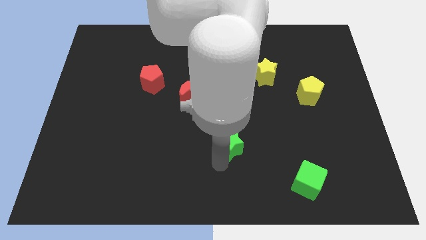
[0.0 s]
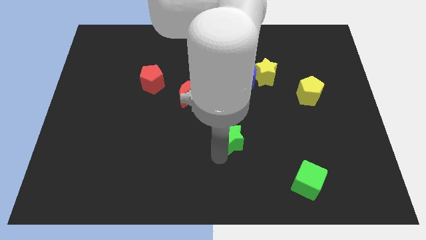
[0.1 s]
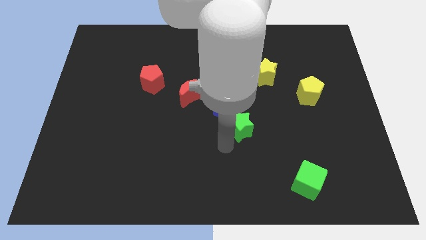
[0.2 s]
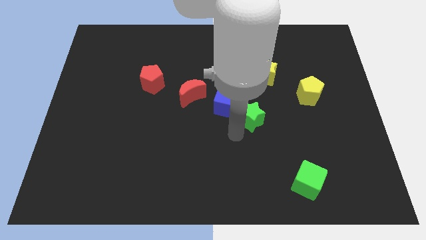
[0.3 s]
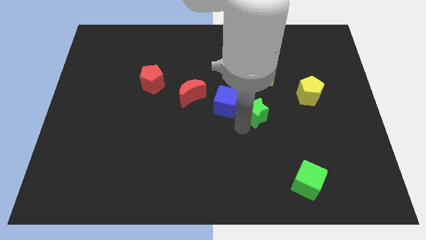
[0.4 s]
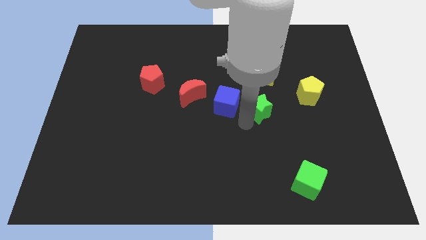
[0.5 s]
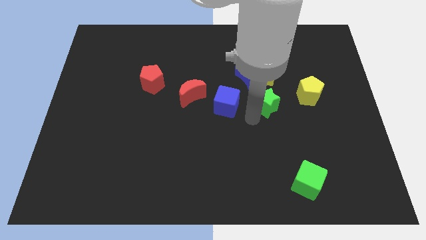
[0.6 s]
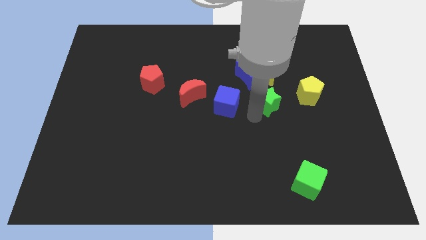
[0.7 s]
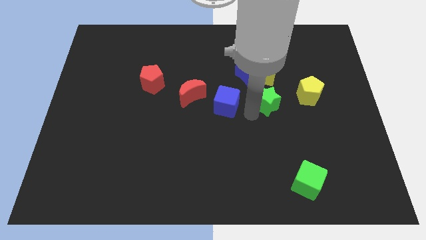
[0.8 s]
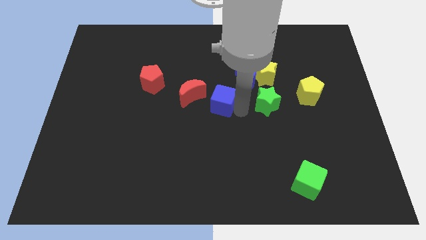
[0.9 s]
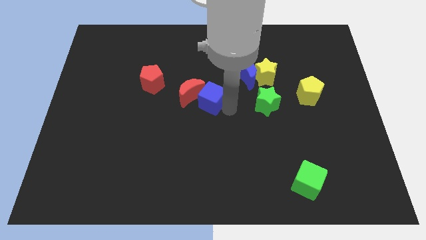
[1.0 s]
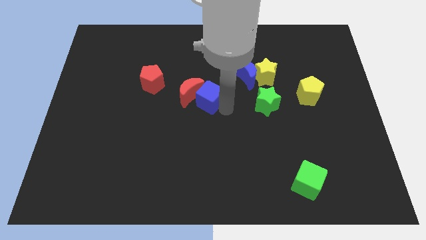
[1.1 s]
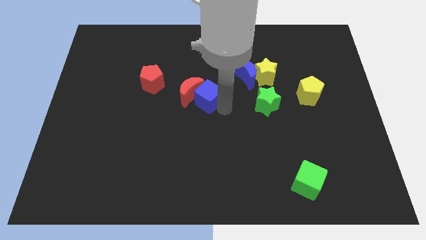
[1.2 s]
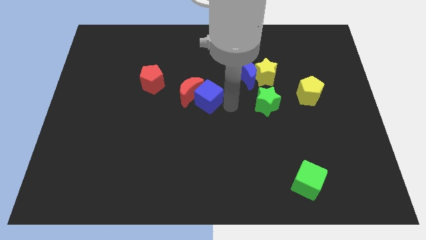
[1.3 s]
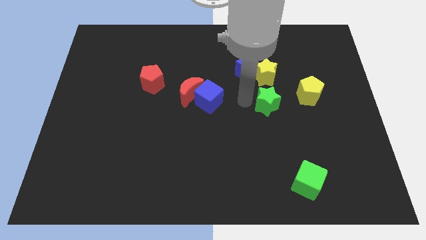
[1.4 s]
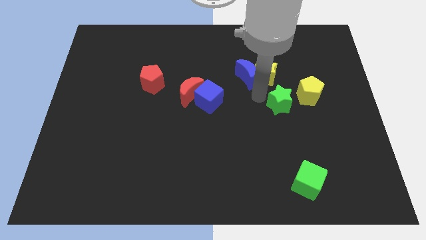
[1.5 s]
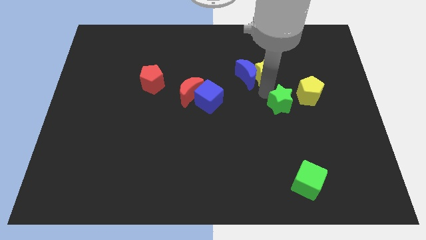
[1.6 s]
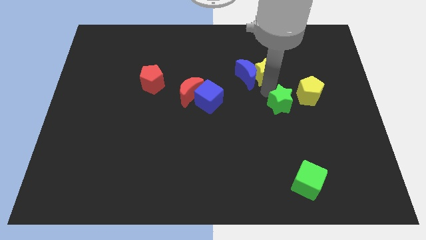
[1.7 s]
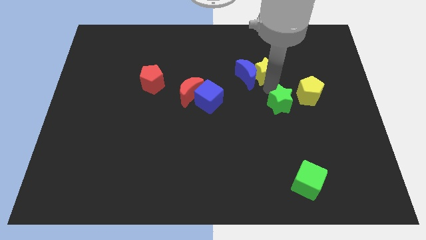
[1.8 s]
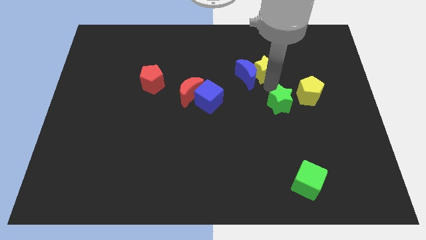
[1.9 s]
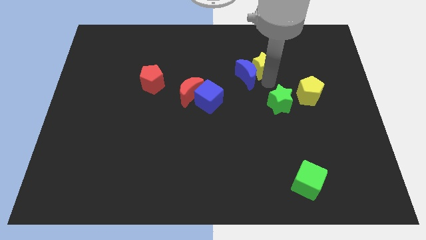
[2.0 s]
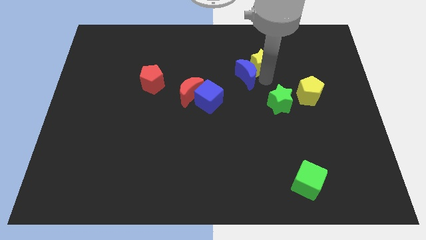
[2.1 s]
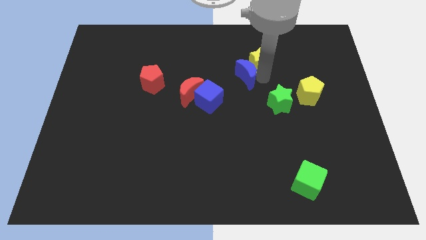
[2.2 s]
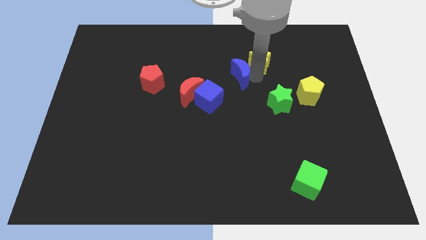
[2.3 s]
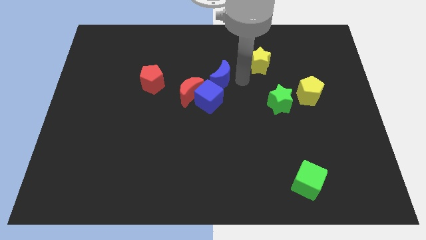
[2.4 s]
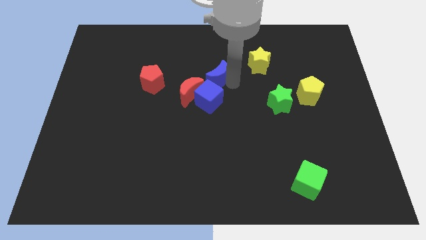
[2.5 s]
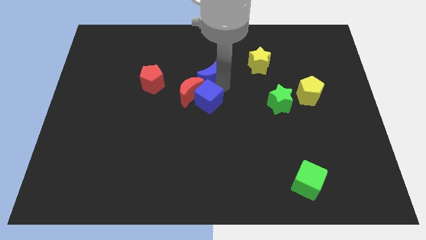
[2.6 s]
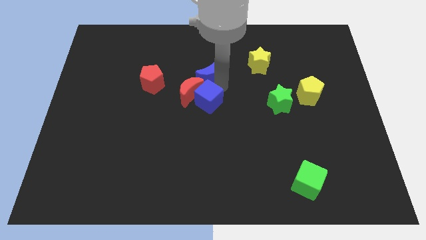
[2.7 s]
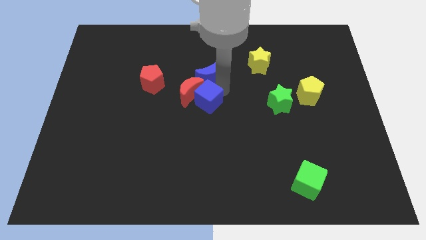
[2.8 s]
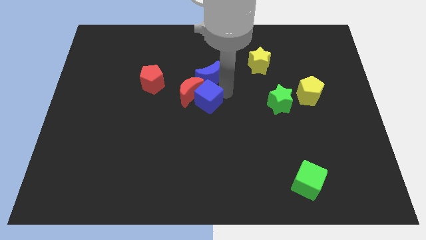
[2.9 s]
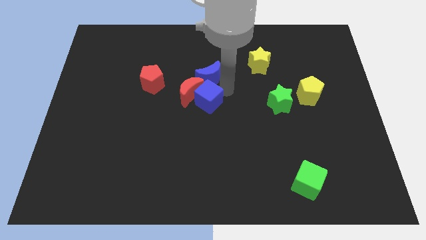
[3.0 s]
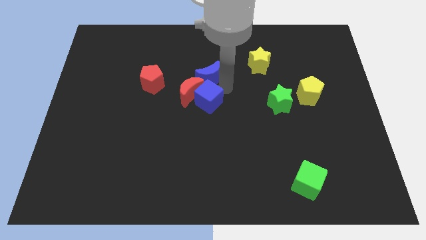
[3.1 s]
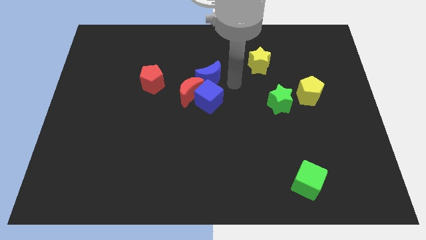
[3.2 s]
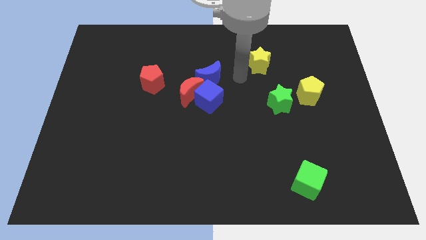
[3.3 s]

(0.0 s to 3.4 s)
move the blue cube close to the red moon

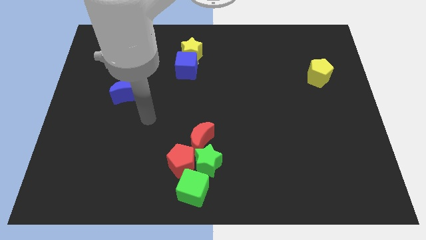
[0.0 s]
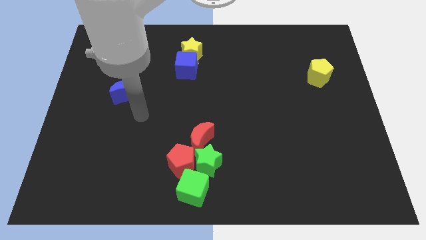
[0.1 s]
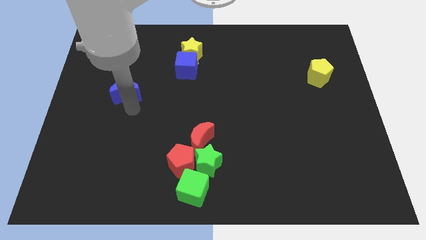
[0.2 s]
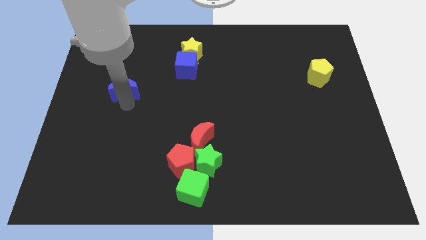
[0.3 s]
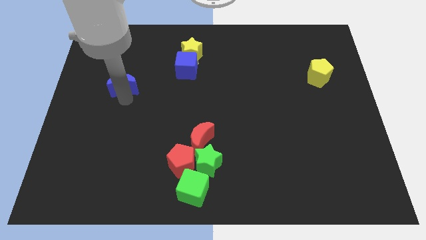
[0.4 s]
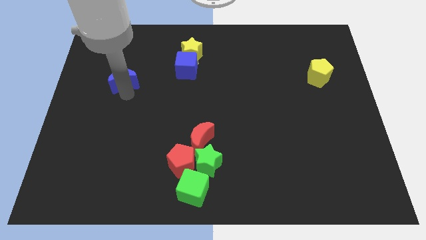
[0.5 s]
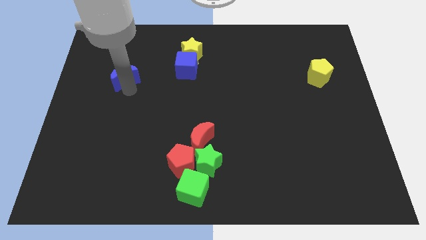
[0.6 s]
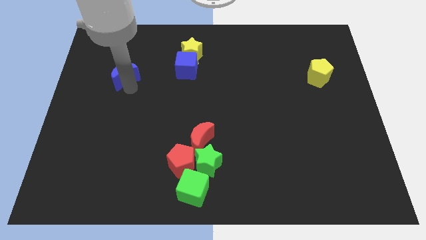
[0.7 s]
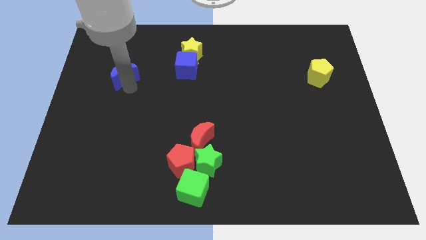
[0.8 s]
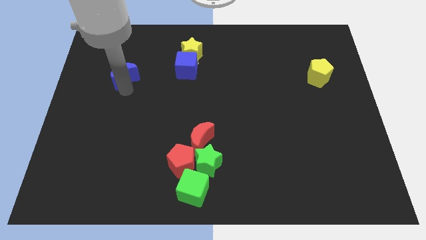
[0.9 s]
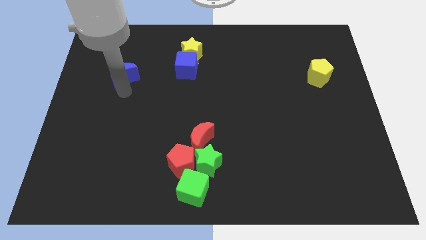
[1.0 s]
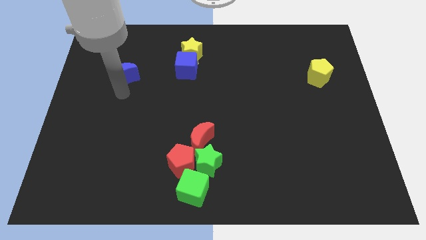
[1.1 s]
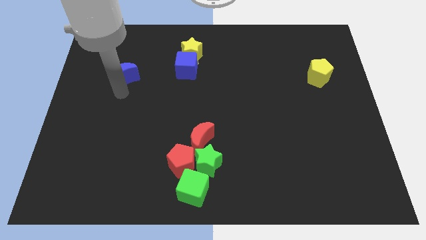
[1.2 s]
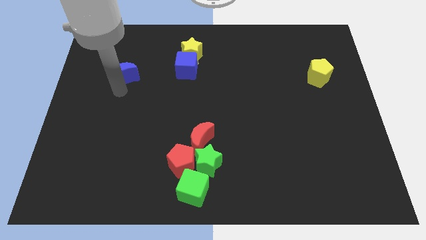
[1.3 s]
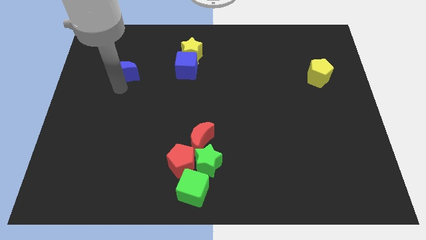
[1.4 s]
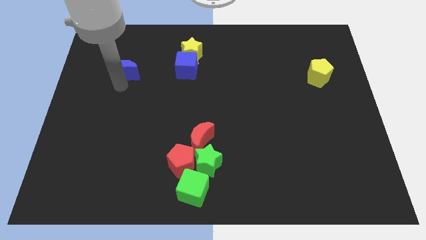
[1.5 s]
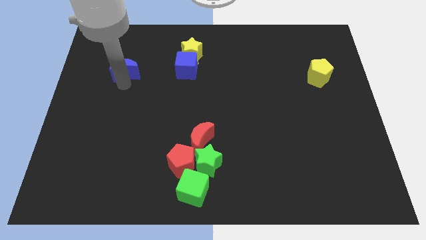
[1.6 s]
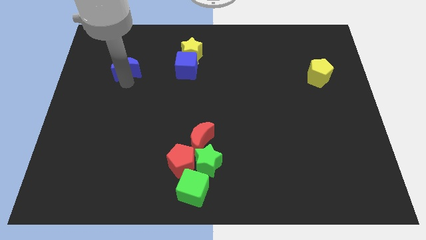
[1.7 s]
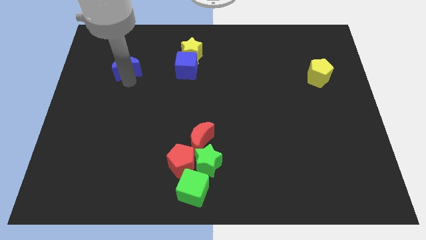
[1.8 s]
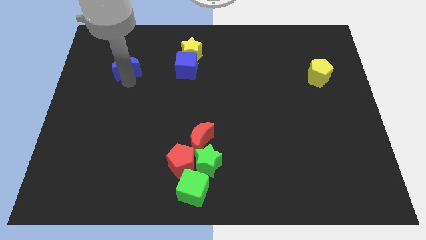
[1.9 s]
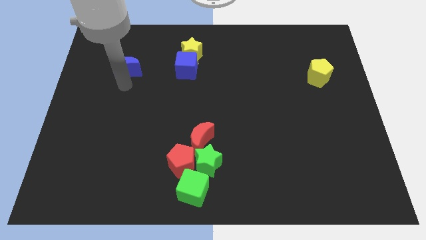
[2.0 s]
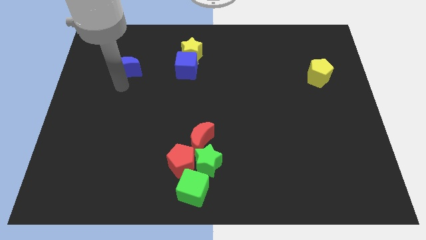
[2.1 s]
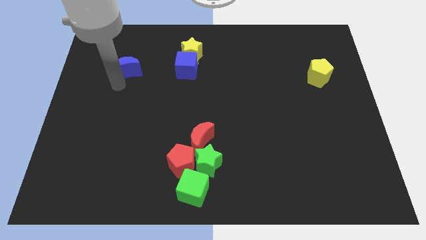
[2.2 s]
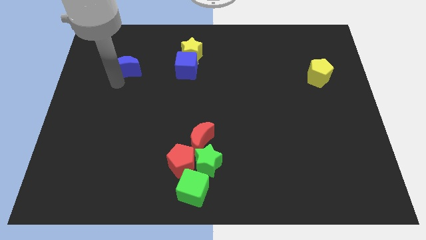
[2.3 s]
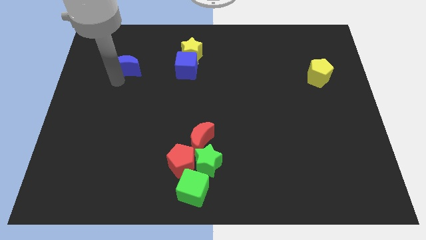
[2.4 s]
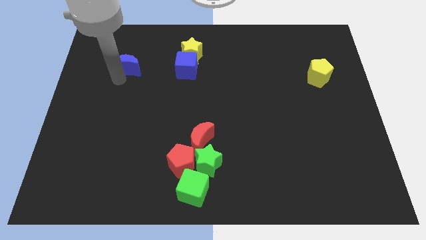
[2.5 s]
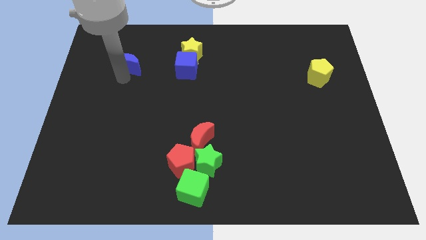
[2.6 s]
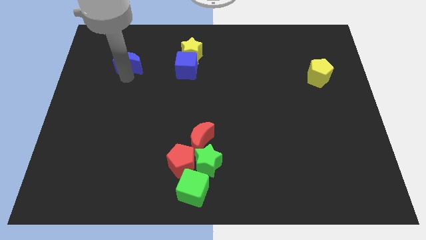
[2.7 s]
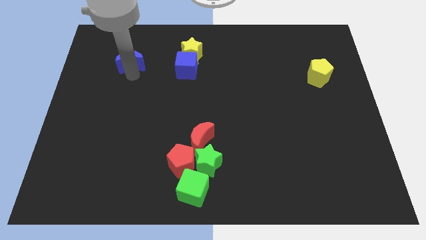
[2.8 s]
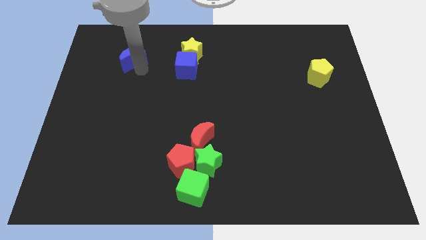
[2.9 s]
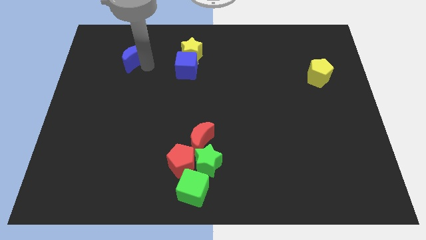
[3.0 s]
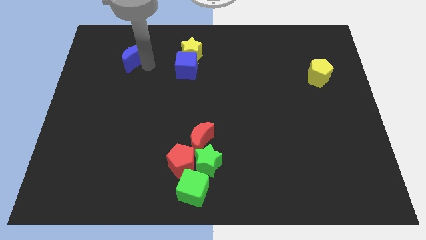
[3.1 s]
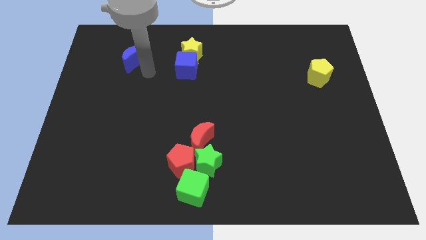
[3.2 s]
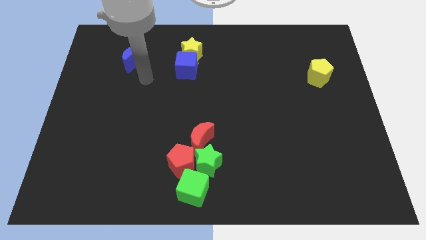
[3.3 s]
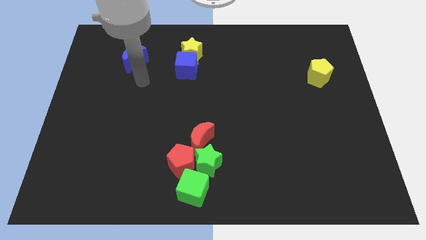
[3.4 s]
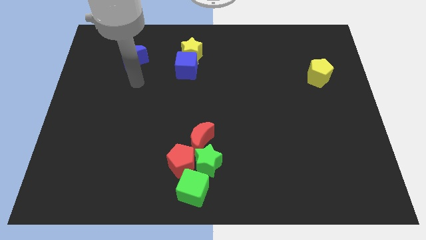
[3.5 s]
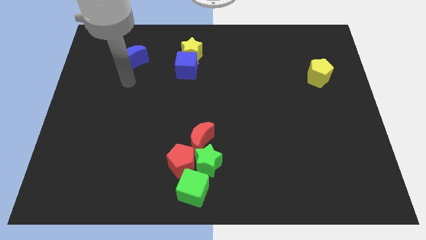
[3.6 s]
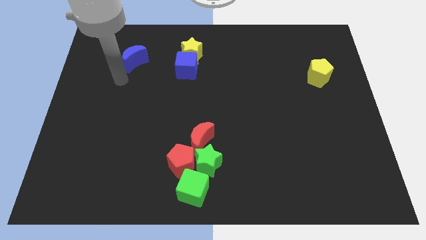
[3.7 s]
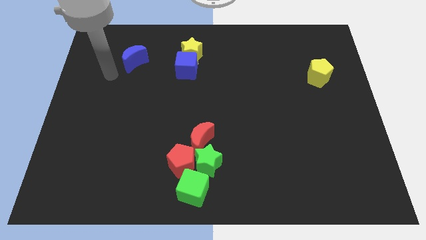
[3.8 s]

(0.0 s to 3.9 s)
place the blue crescent left to the blue cube

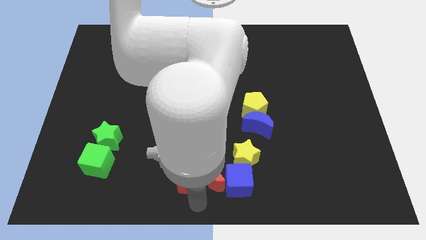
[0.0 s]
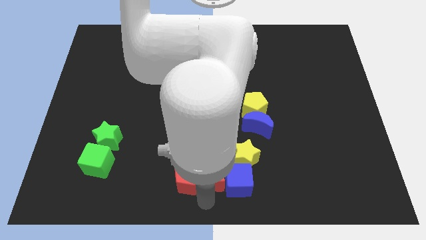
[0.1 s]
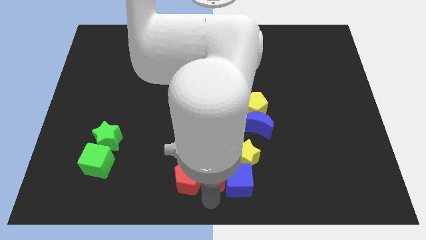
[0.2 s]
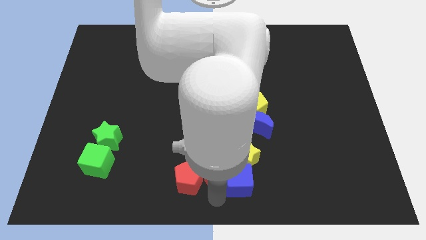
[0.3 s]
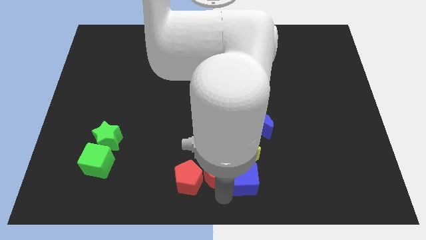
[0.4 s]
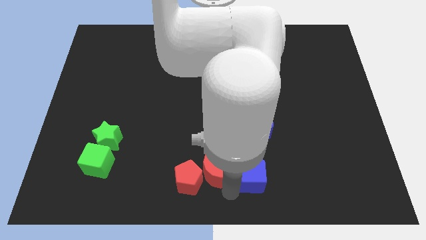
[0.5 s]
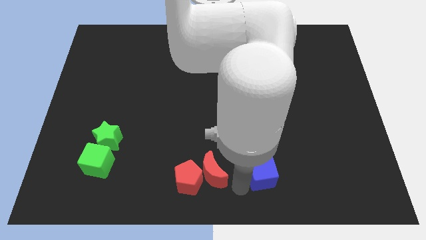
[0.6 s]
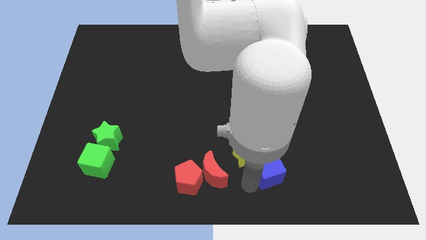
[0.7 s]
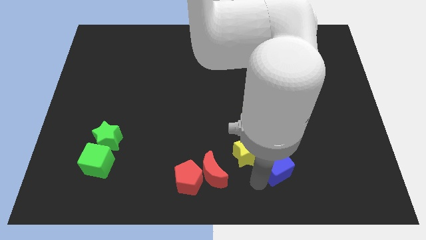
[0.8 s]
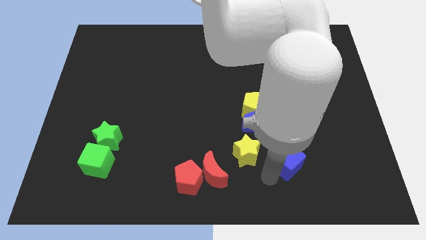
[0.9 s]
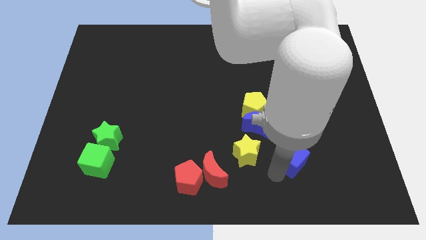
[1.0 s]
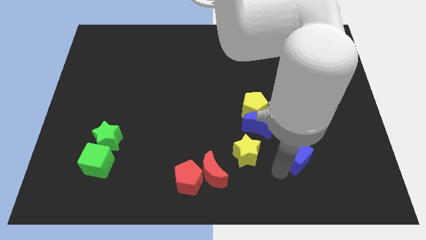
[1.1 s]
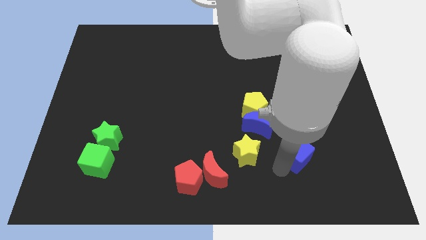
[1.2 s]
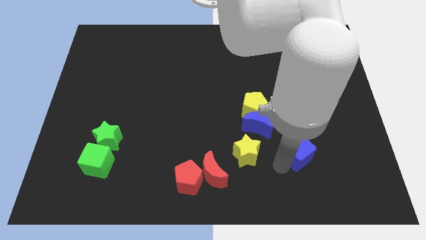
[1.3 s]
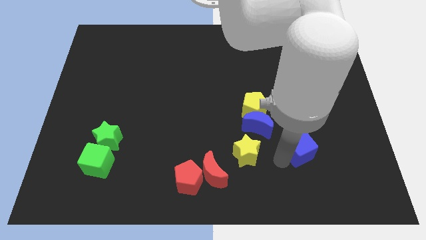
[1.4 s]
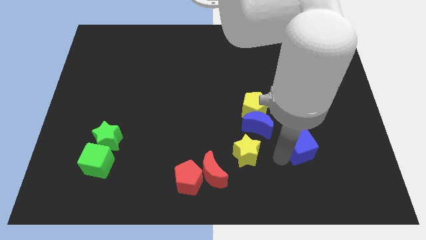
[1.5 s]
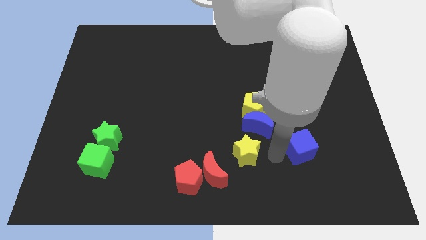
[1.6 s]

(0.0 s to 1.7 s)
move the blue cube to the horizontal right of the yellow star

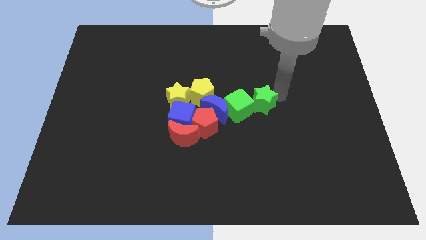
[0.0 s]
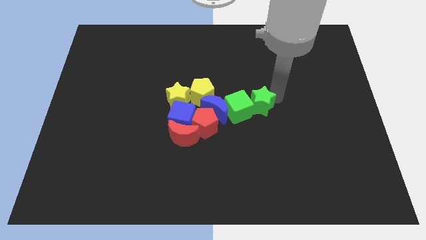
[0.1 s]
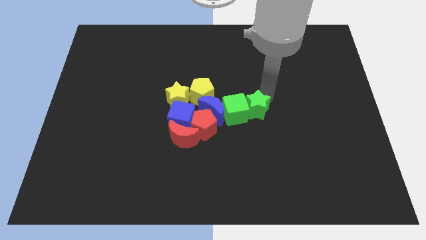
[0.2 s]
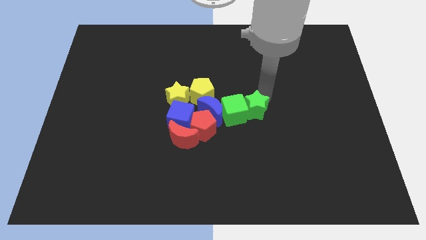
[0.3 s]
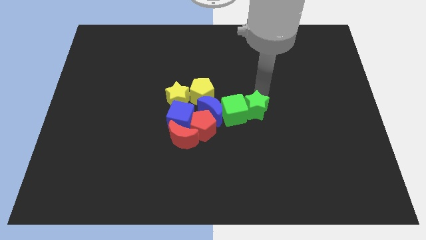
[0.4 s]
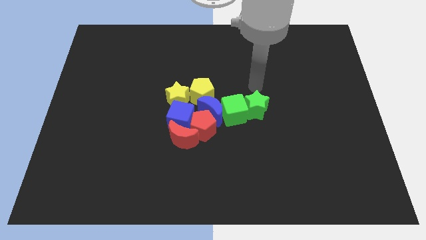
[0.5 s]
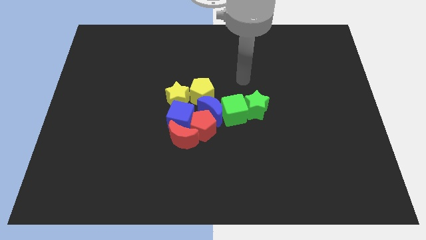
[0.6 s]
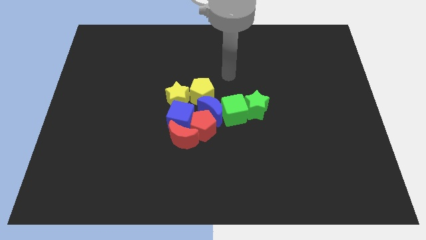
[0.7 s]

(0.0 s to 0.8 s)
push green star in to green cube
